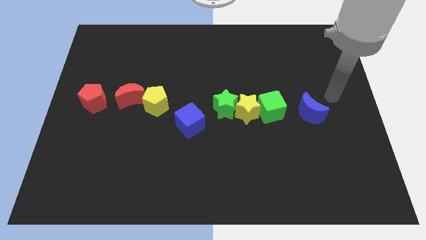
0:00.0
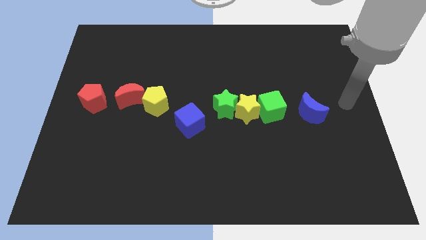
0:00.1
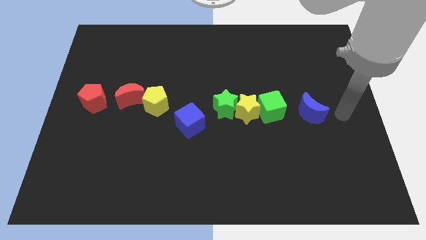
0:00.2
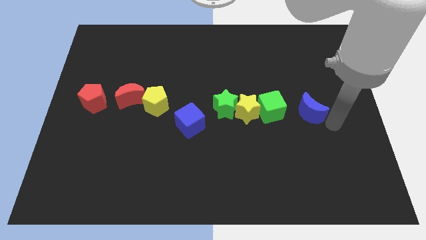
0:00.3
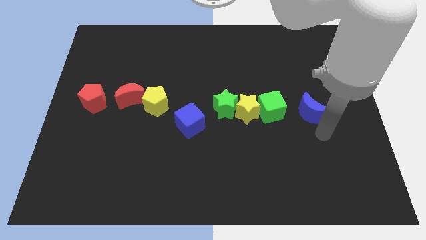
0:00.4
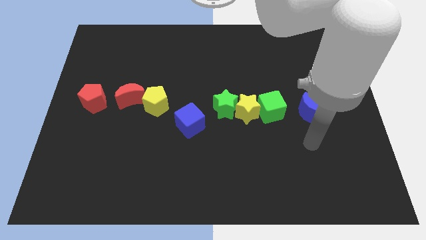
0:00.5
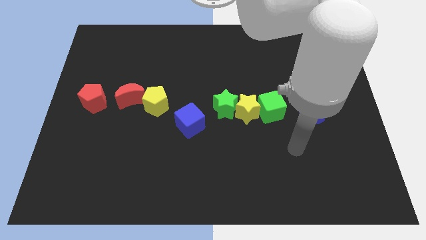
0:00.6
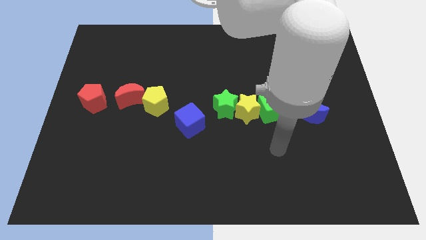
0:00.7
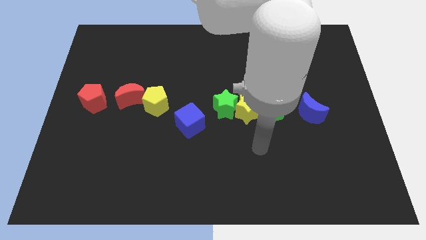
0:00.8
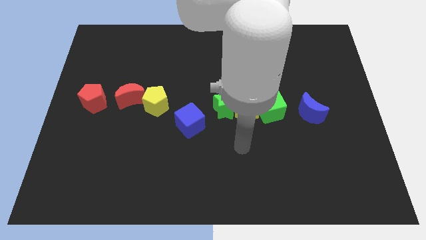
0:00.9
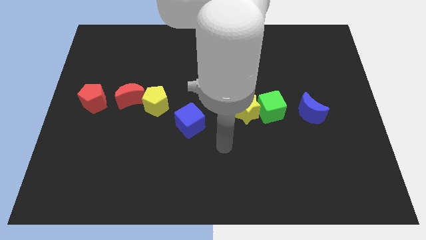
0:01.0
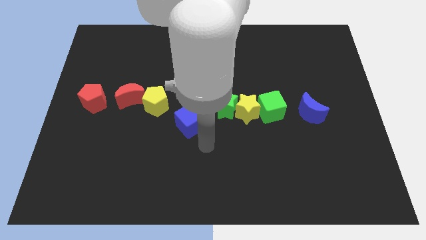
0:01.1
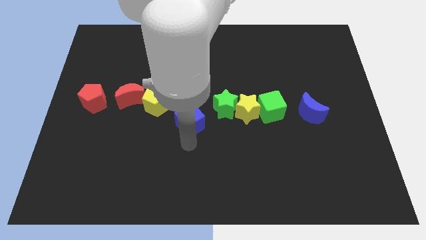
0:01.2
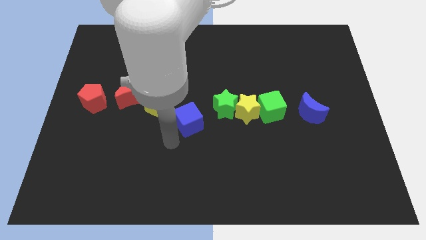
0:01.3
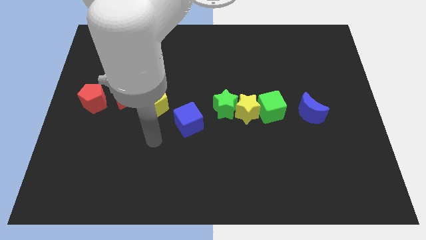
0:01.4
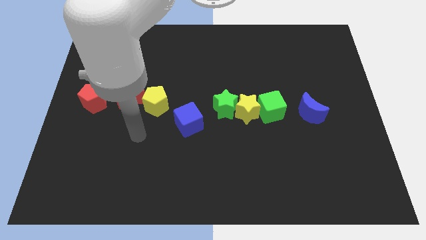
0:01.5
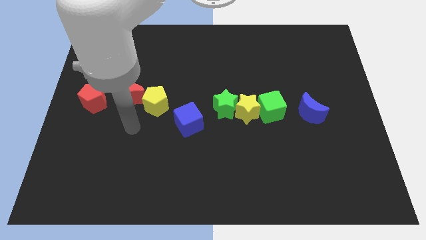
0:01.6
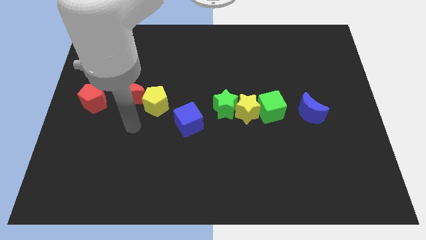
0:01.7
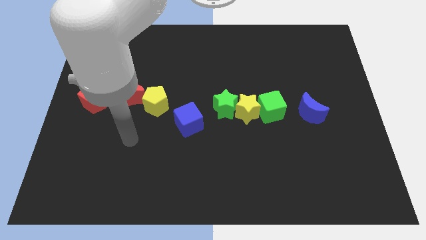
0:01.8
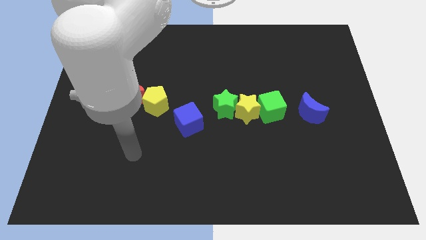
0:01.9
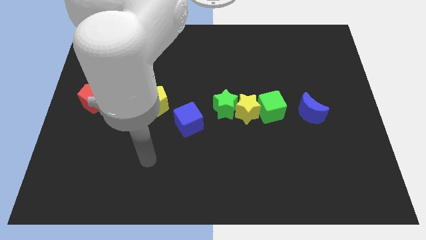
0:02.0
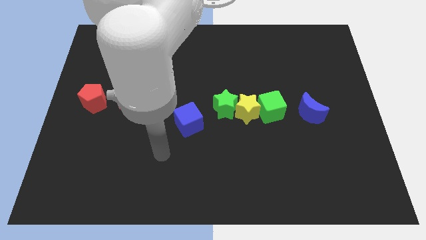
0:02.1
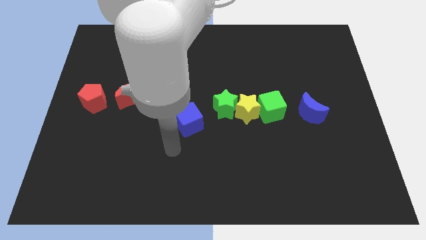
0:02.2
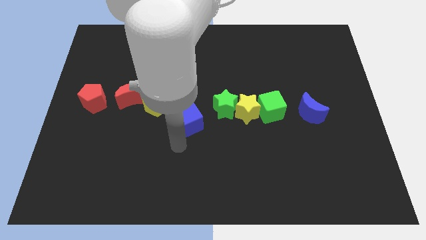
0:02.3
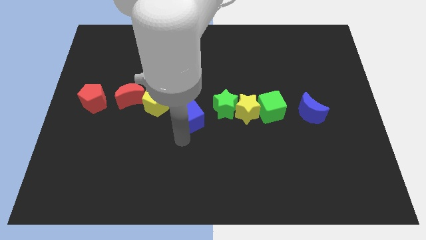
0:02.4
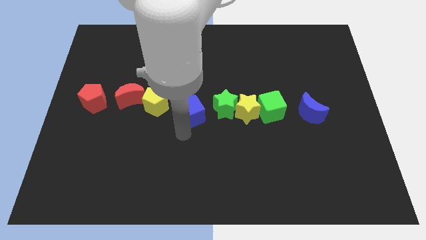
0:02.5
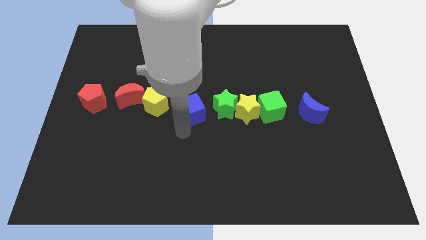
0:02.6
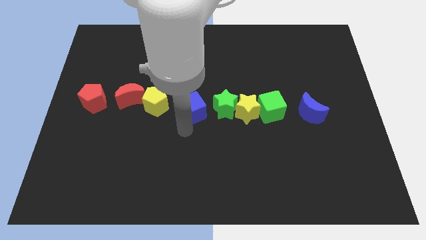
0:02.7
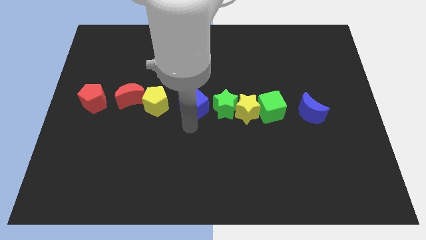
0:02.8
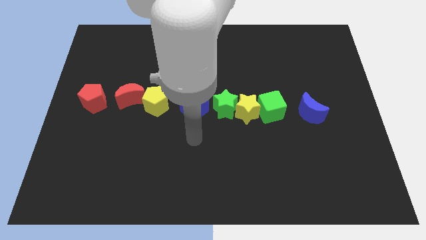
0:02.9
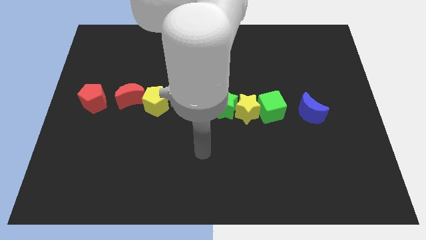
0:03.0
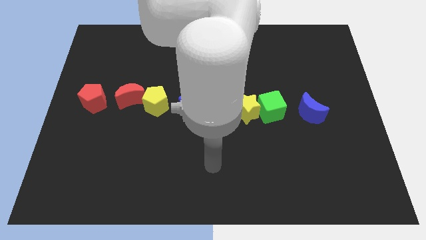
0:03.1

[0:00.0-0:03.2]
place the blue cube in between the yellow pentagon and green star

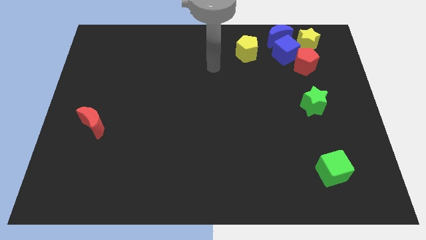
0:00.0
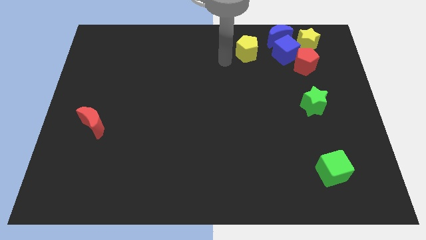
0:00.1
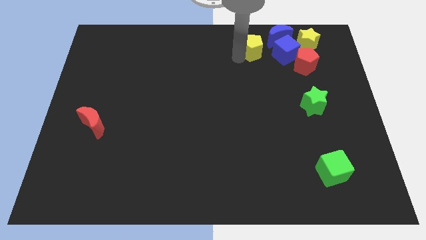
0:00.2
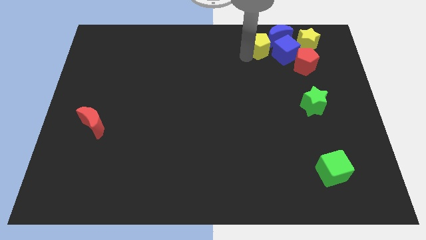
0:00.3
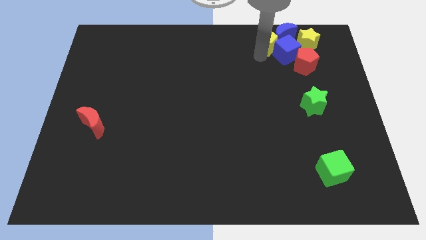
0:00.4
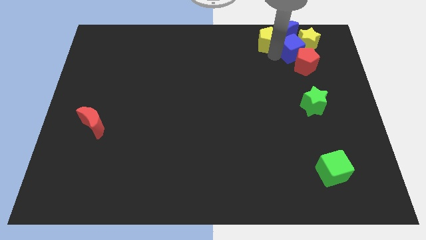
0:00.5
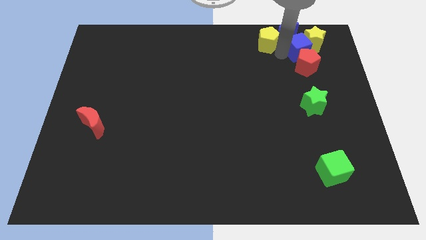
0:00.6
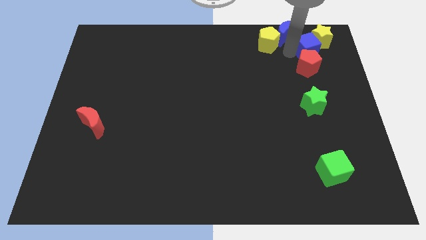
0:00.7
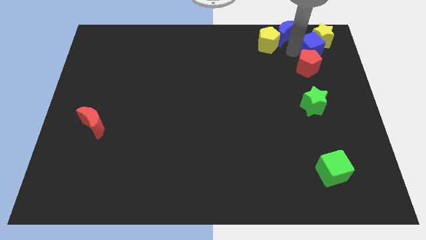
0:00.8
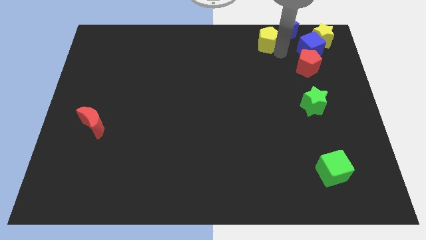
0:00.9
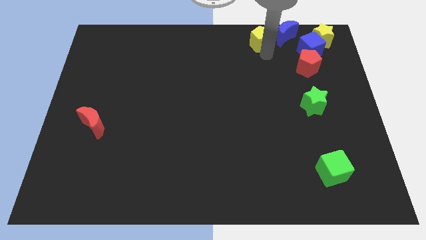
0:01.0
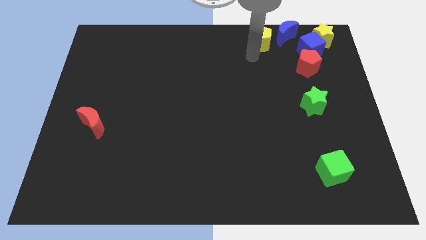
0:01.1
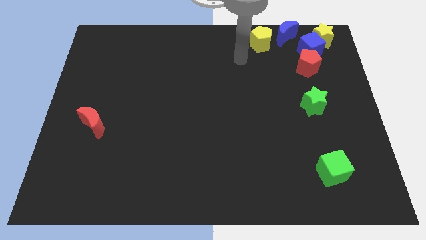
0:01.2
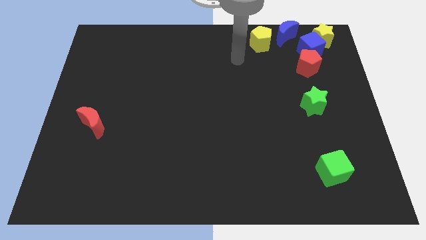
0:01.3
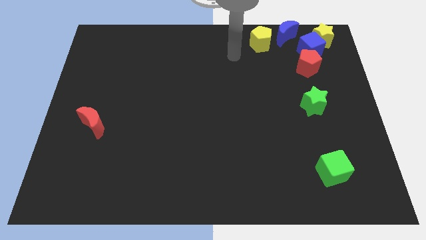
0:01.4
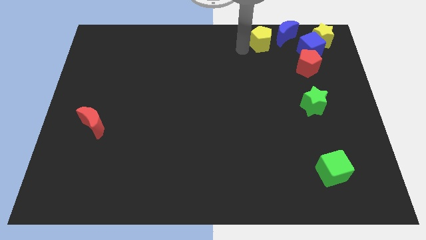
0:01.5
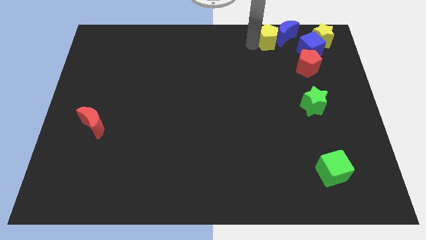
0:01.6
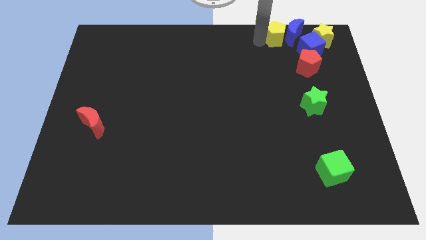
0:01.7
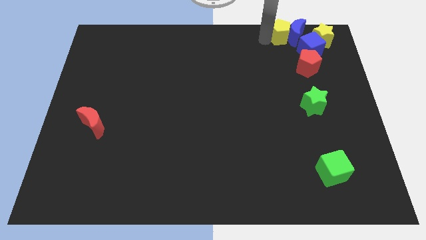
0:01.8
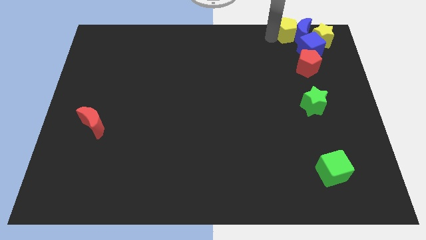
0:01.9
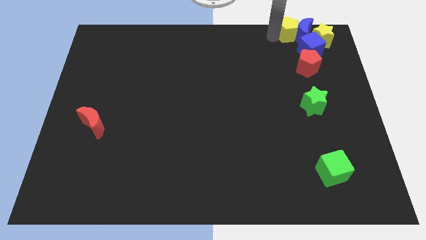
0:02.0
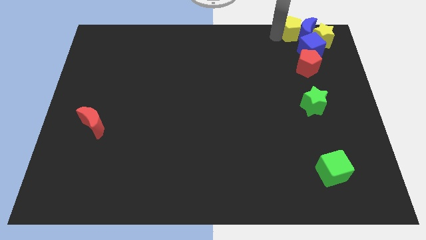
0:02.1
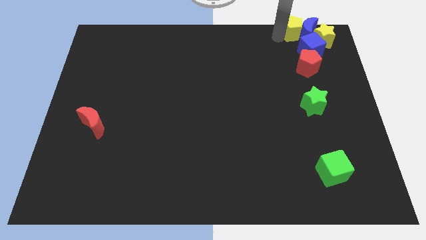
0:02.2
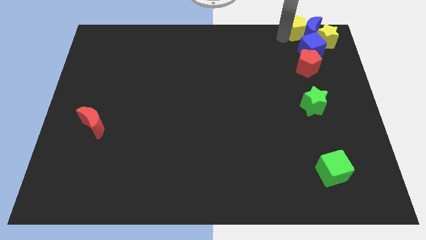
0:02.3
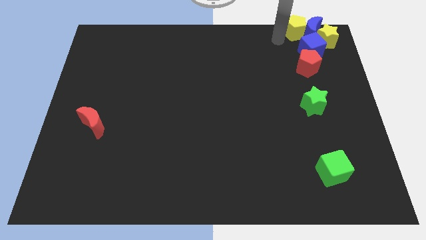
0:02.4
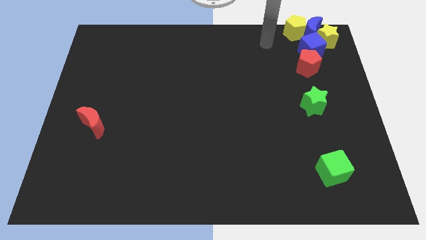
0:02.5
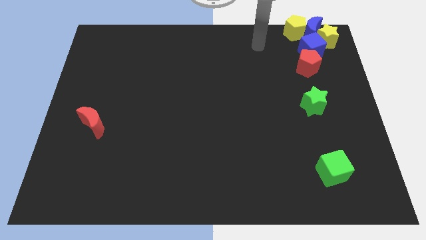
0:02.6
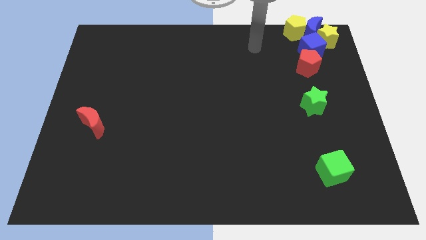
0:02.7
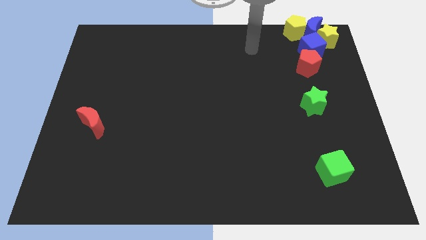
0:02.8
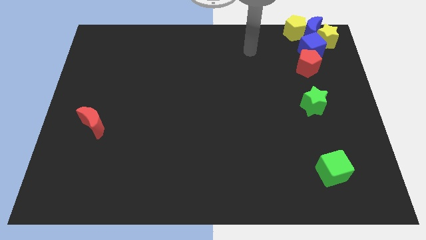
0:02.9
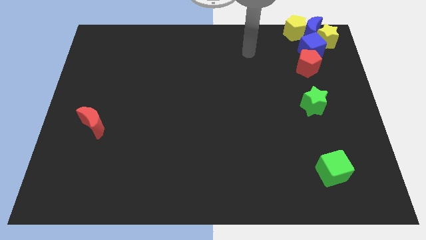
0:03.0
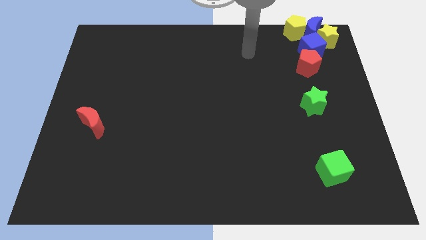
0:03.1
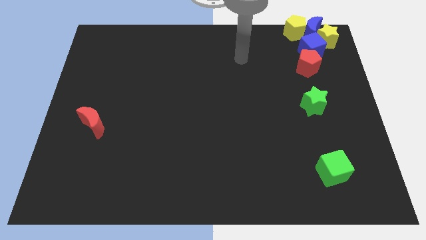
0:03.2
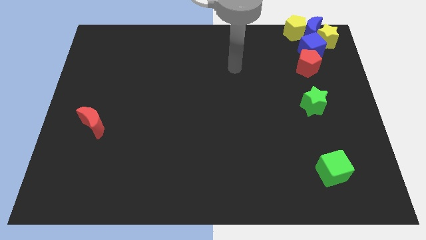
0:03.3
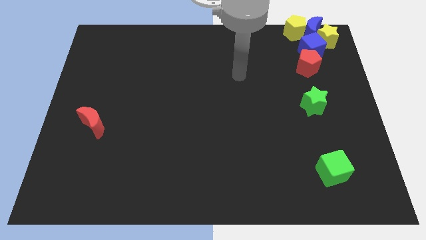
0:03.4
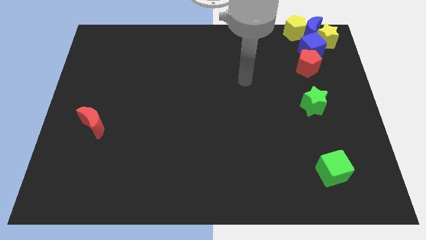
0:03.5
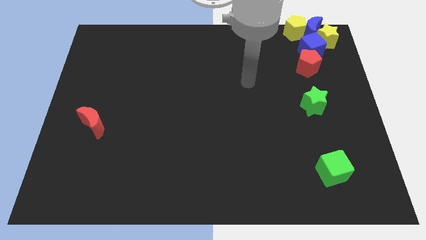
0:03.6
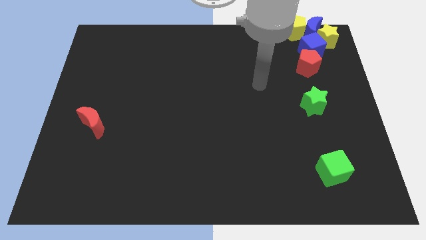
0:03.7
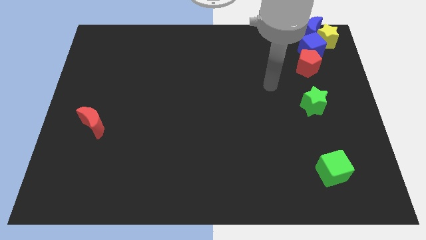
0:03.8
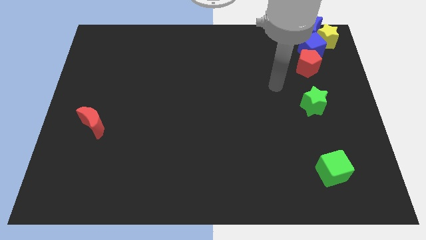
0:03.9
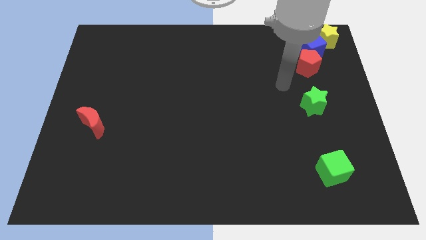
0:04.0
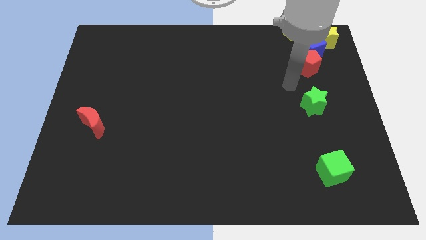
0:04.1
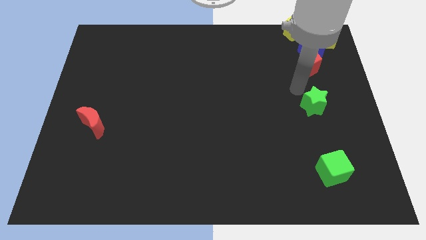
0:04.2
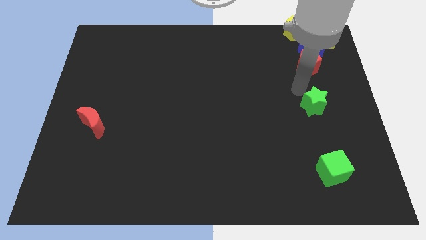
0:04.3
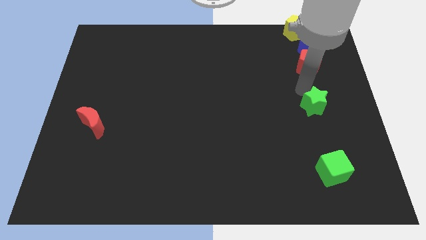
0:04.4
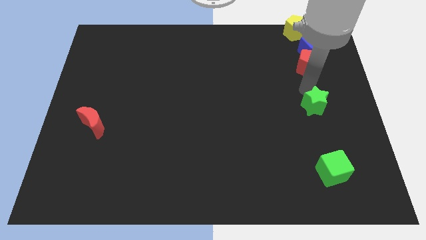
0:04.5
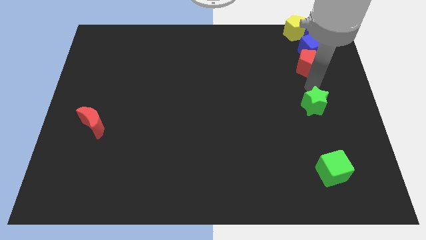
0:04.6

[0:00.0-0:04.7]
push the yellow star to the top right corner

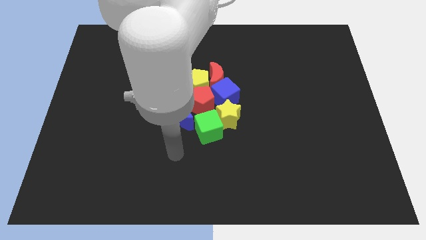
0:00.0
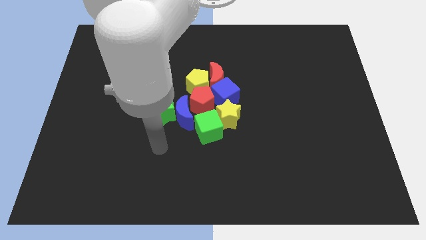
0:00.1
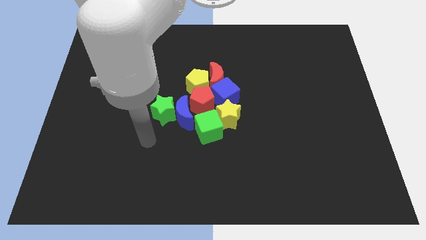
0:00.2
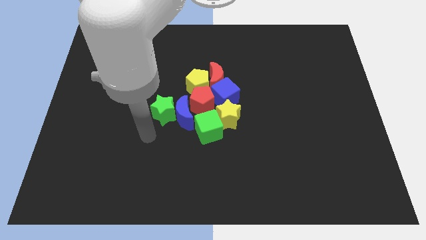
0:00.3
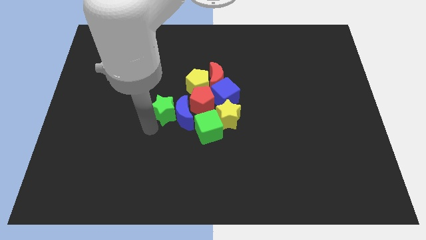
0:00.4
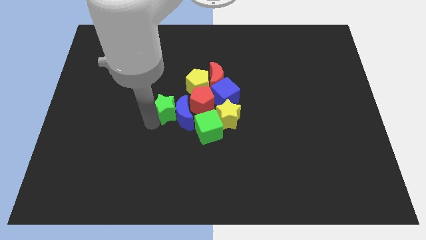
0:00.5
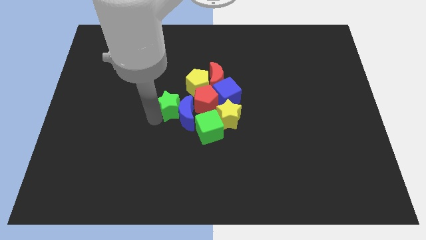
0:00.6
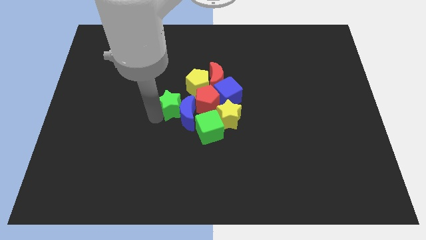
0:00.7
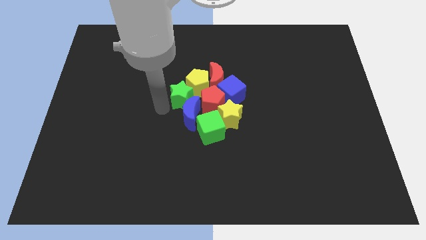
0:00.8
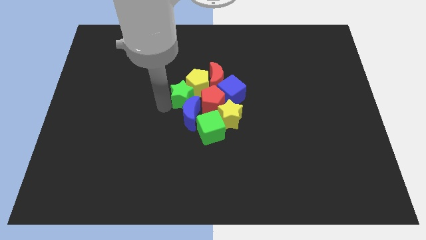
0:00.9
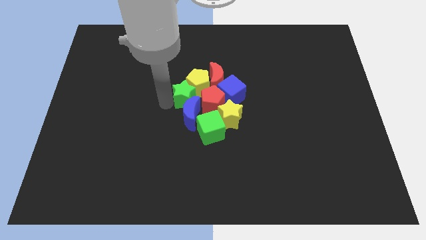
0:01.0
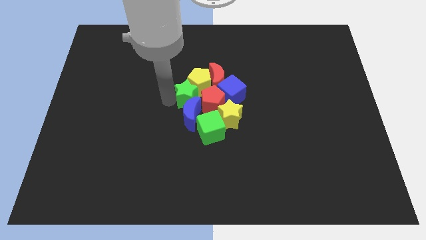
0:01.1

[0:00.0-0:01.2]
push the green star into the yellow pentagon
